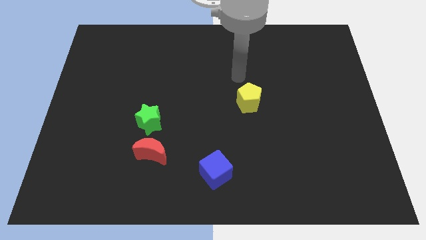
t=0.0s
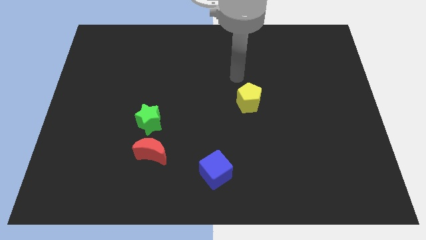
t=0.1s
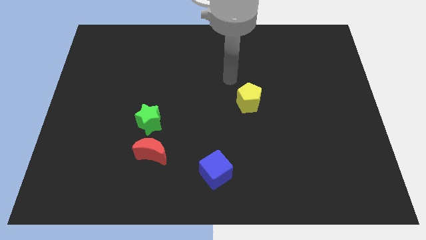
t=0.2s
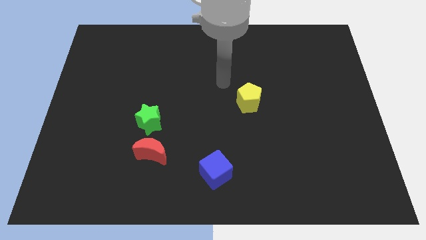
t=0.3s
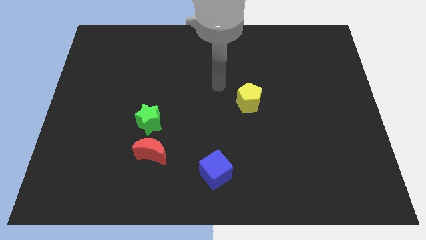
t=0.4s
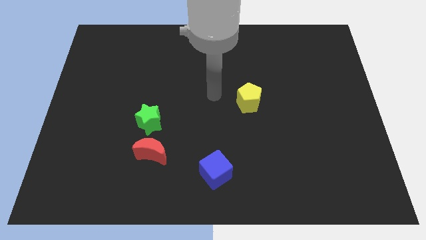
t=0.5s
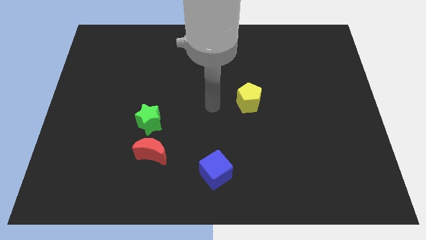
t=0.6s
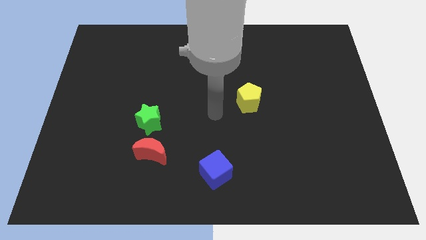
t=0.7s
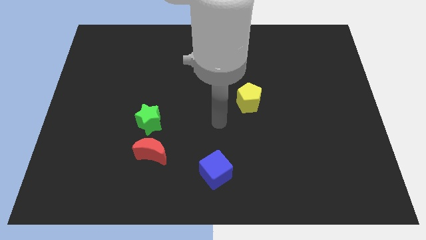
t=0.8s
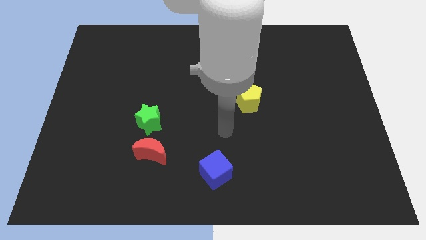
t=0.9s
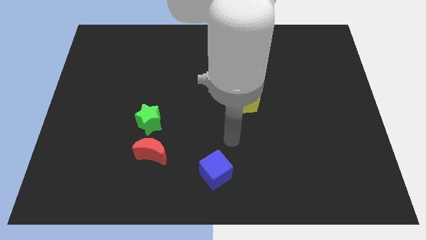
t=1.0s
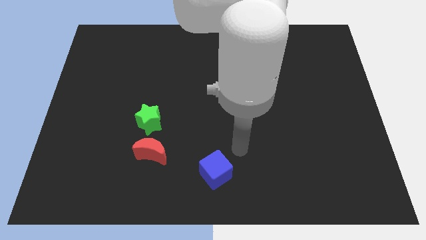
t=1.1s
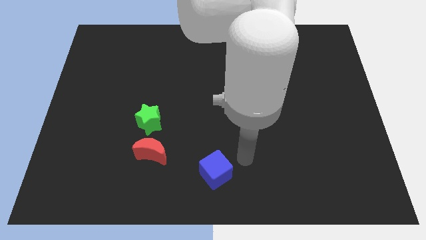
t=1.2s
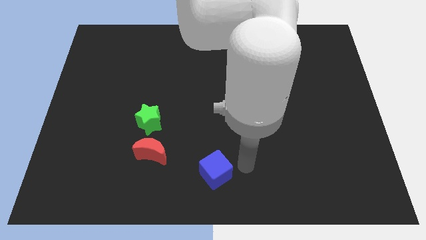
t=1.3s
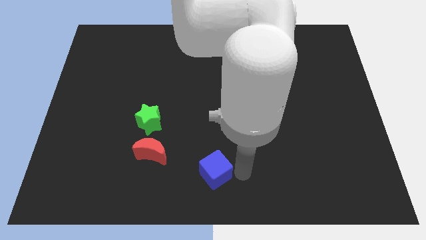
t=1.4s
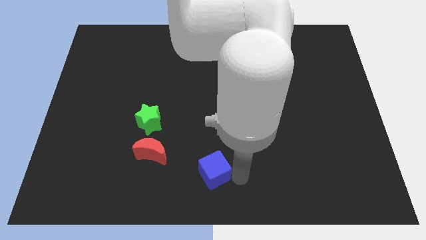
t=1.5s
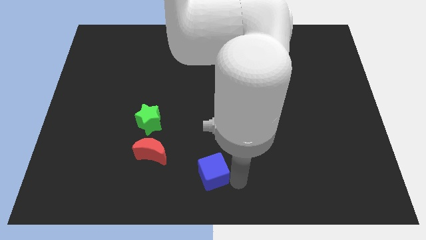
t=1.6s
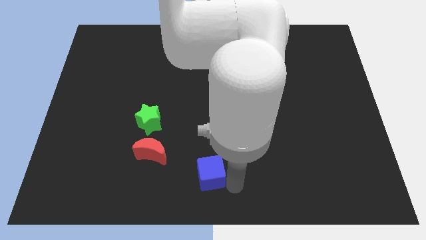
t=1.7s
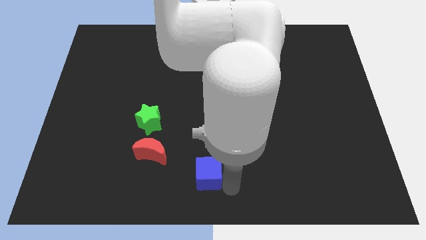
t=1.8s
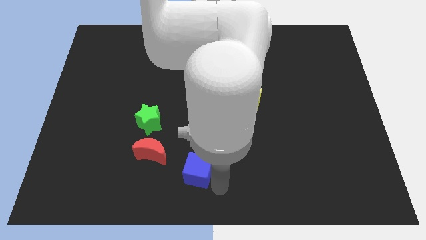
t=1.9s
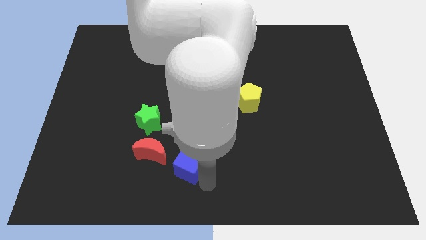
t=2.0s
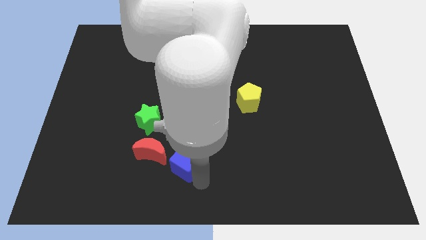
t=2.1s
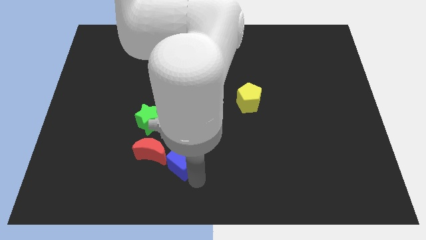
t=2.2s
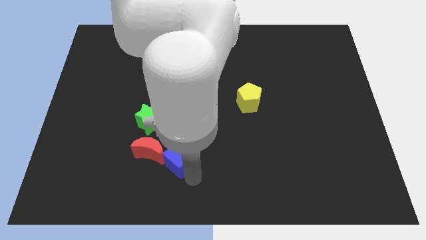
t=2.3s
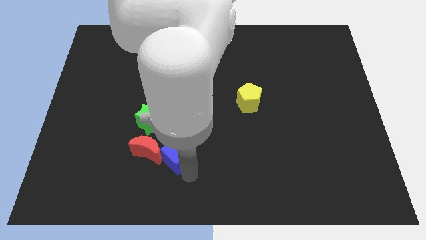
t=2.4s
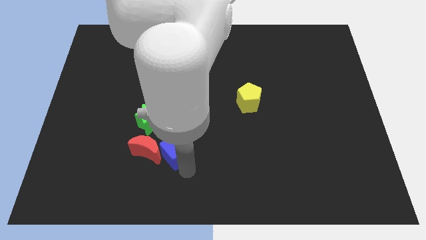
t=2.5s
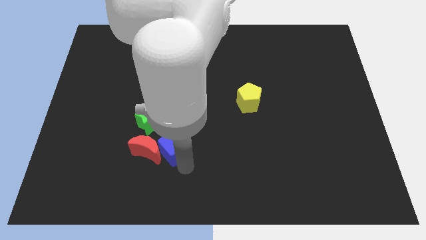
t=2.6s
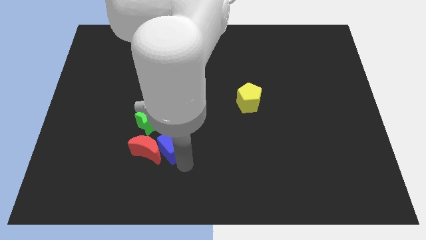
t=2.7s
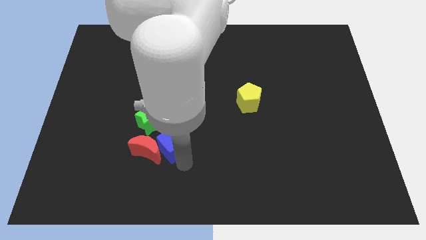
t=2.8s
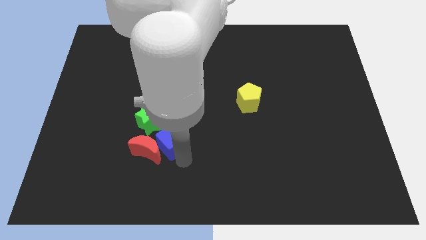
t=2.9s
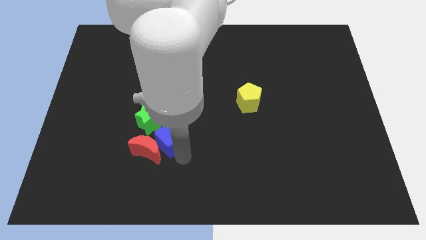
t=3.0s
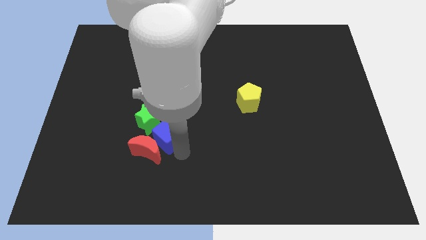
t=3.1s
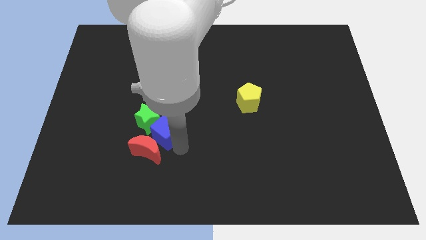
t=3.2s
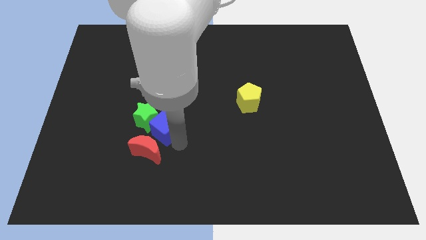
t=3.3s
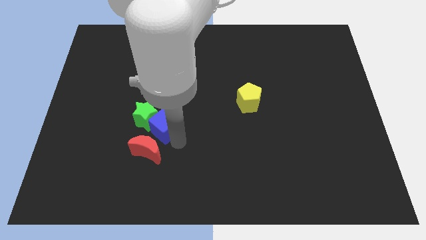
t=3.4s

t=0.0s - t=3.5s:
slide the blue block next to the green block

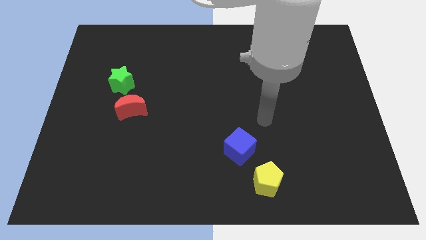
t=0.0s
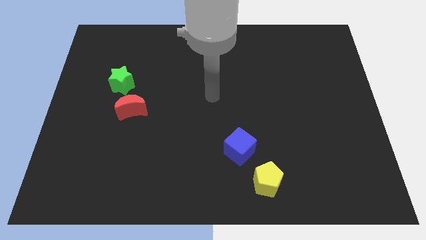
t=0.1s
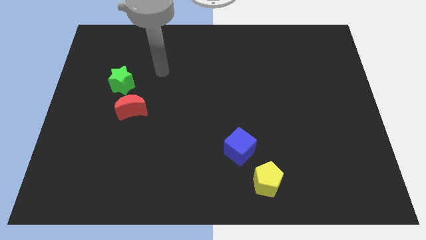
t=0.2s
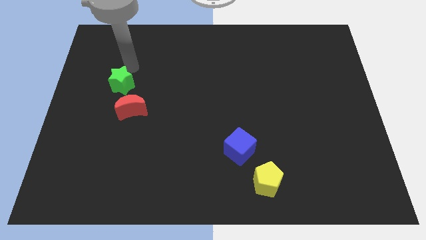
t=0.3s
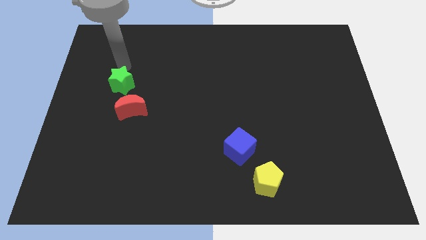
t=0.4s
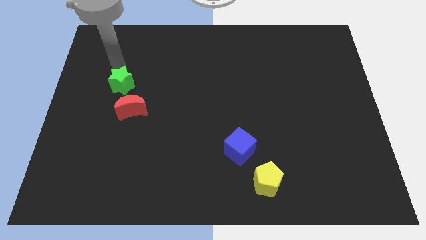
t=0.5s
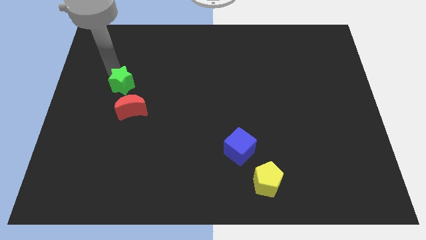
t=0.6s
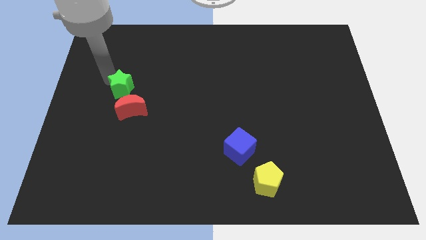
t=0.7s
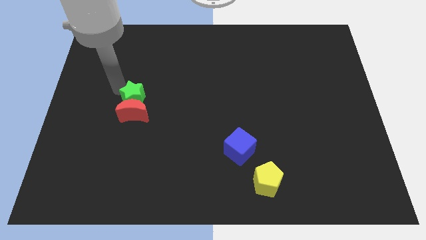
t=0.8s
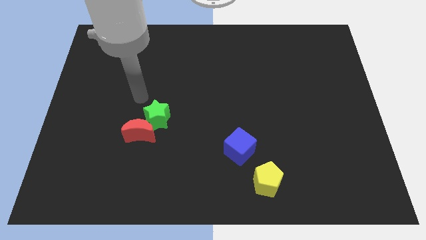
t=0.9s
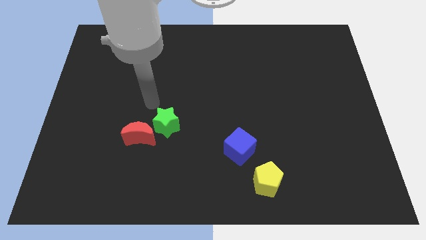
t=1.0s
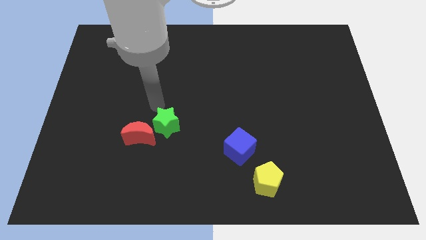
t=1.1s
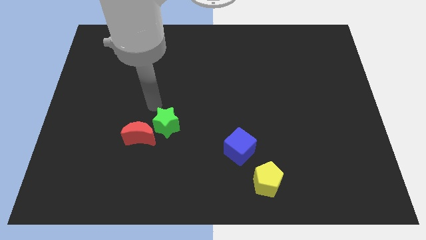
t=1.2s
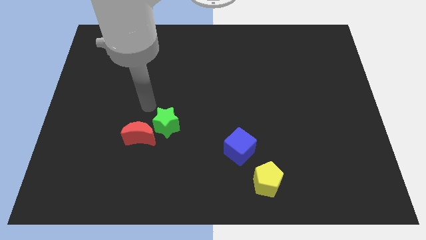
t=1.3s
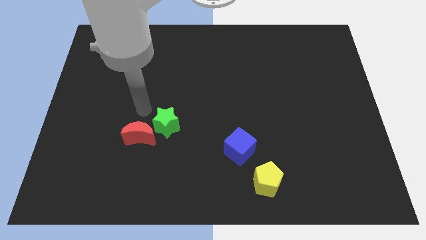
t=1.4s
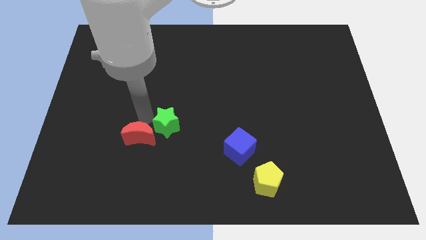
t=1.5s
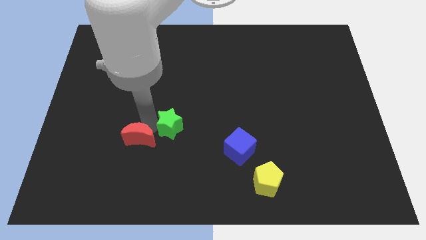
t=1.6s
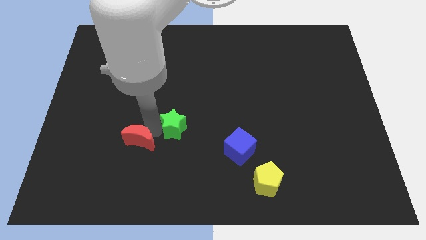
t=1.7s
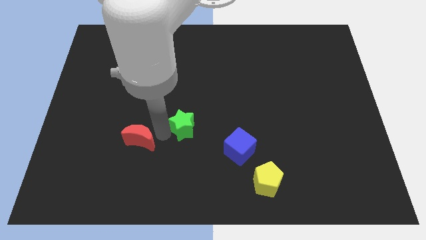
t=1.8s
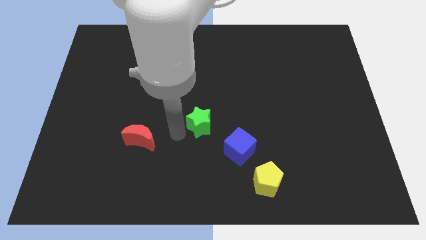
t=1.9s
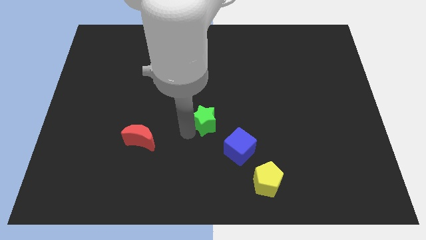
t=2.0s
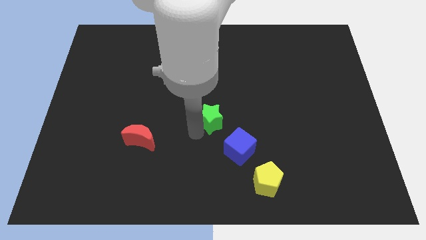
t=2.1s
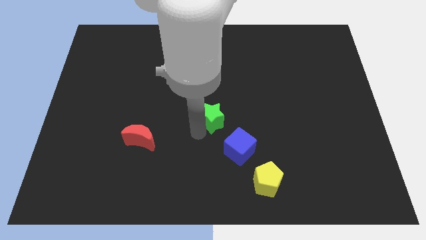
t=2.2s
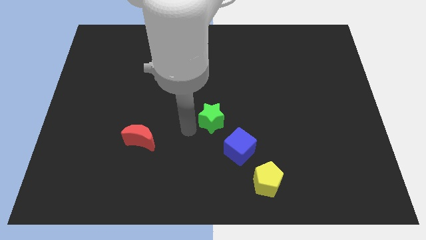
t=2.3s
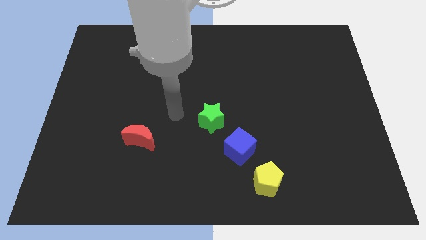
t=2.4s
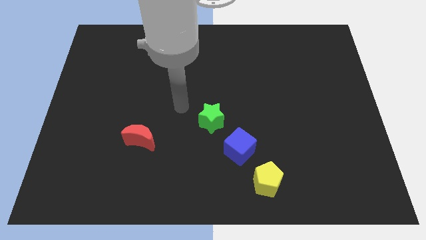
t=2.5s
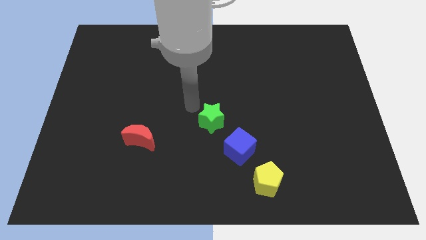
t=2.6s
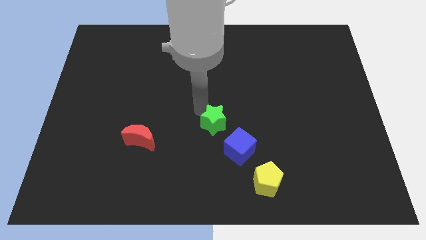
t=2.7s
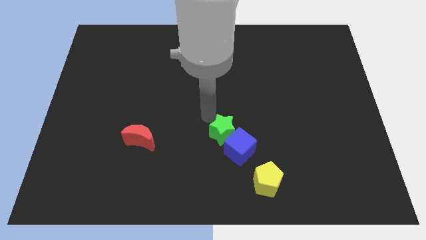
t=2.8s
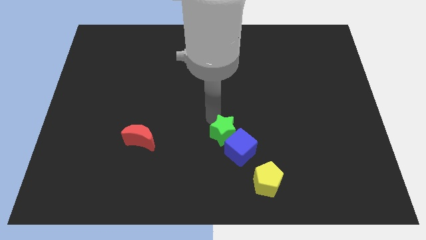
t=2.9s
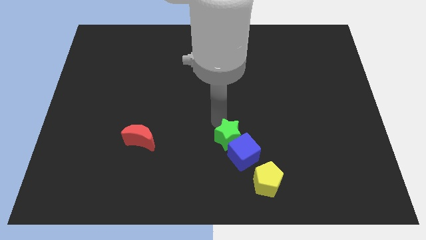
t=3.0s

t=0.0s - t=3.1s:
slide the green star close to the cube

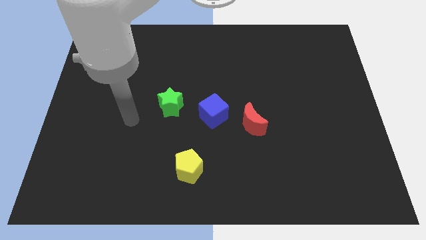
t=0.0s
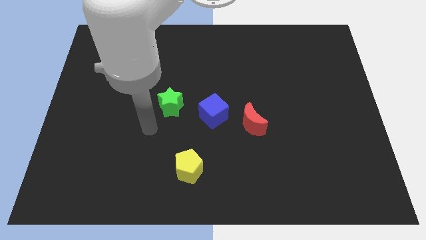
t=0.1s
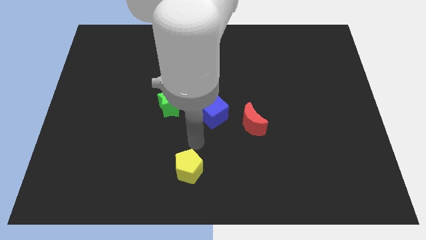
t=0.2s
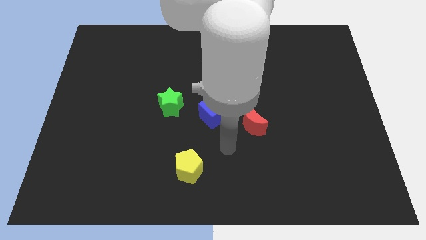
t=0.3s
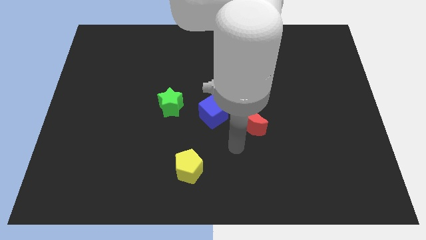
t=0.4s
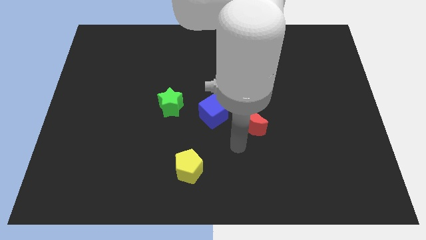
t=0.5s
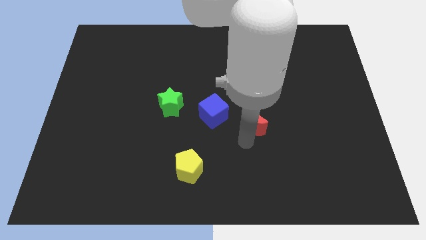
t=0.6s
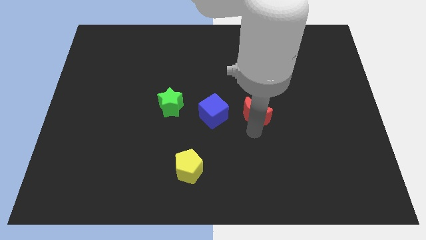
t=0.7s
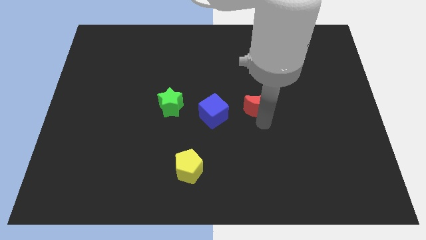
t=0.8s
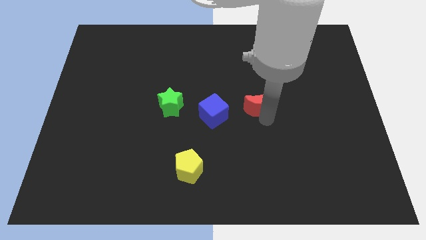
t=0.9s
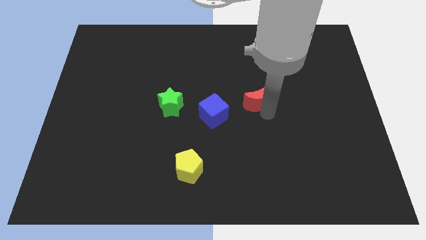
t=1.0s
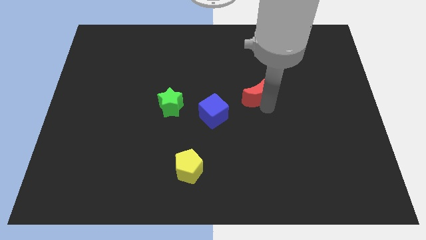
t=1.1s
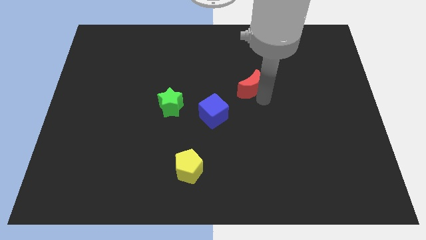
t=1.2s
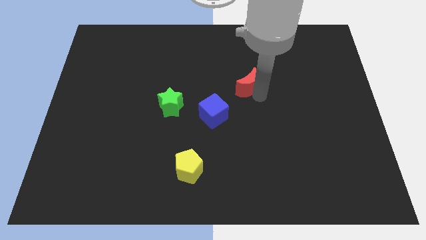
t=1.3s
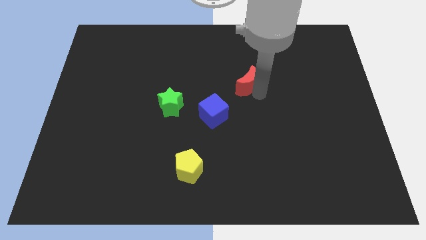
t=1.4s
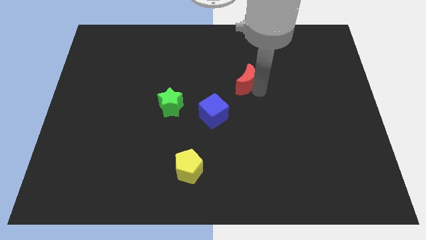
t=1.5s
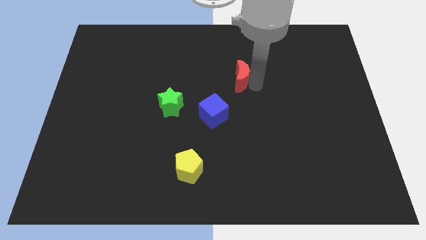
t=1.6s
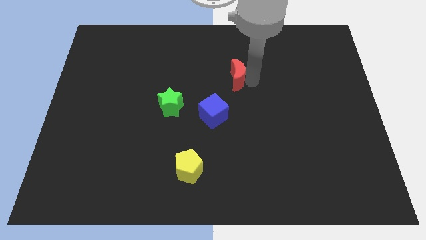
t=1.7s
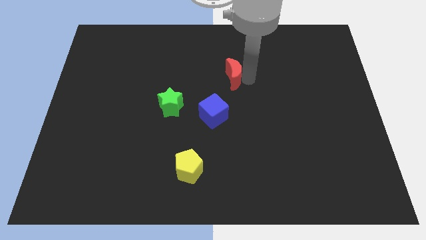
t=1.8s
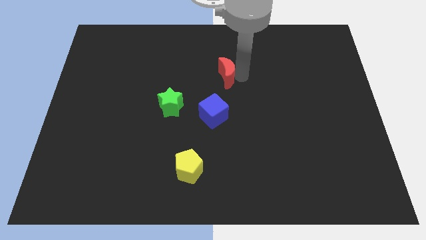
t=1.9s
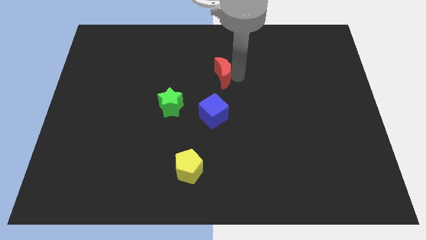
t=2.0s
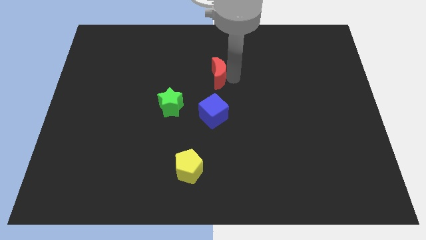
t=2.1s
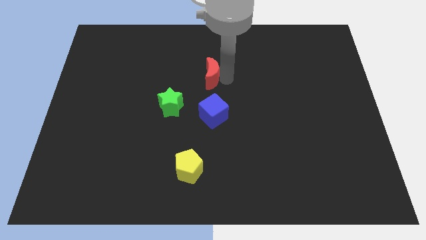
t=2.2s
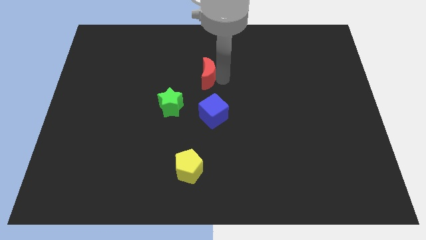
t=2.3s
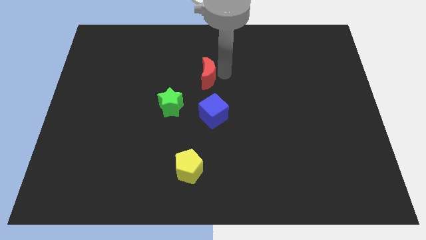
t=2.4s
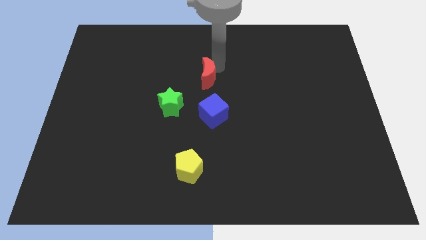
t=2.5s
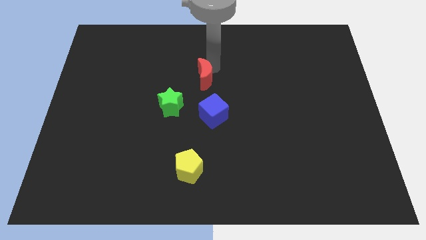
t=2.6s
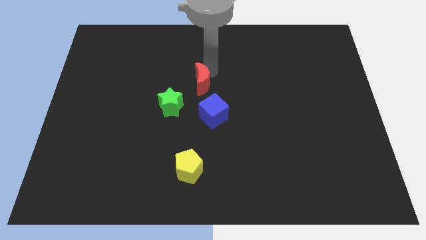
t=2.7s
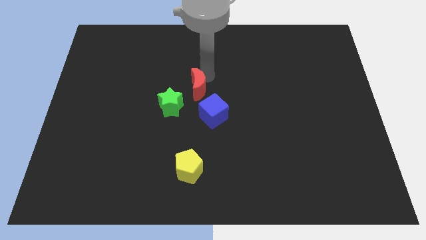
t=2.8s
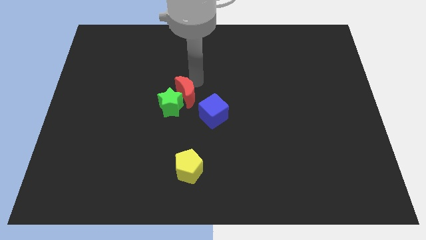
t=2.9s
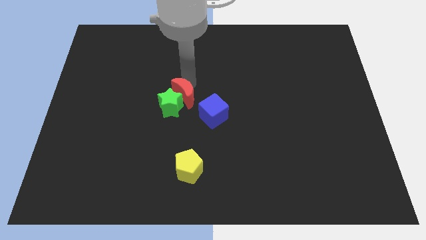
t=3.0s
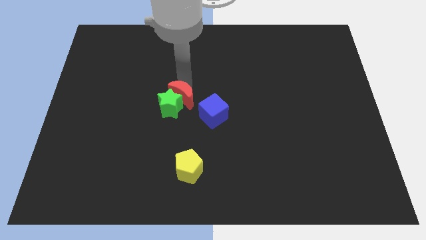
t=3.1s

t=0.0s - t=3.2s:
slide the moon towards the star
